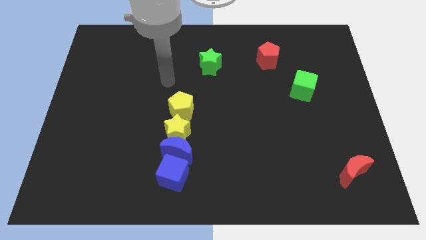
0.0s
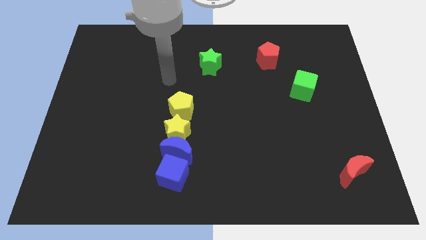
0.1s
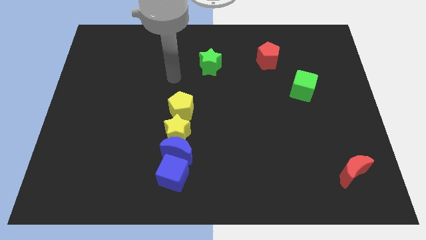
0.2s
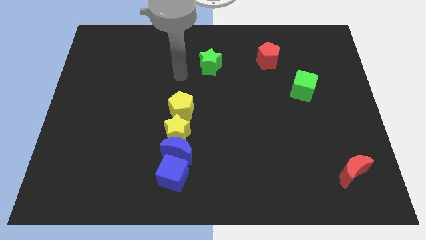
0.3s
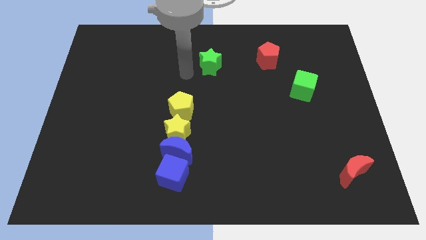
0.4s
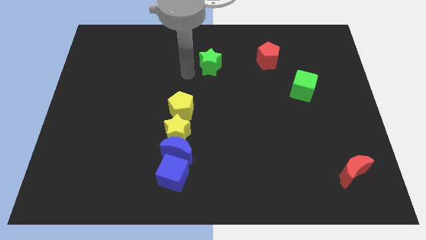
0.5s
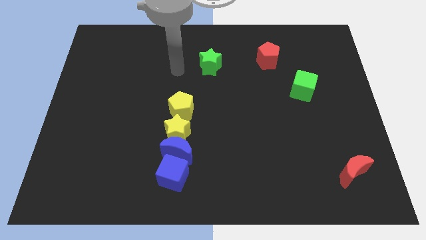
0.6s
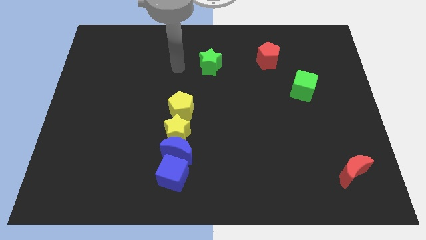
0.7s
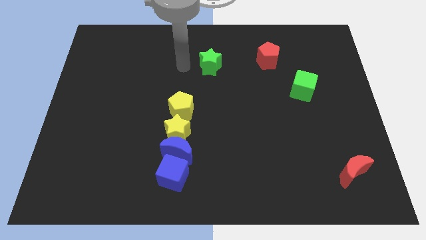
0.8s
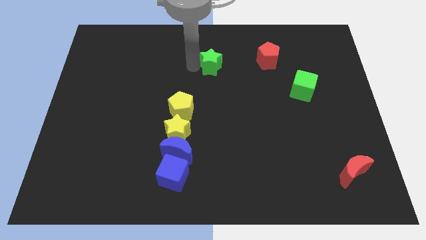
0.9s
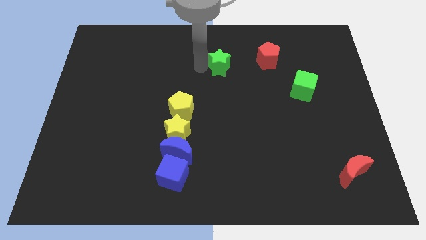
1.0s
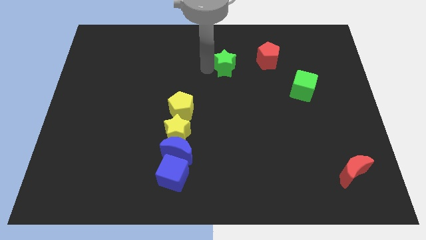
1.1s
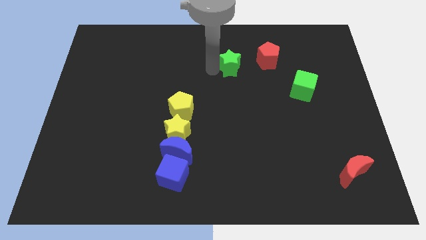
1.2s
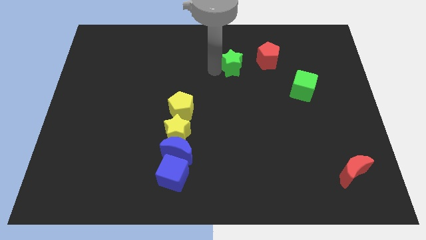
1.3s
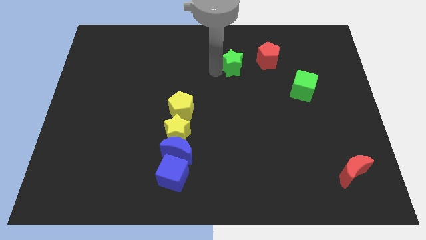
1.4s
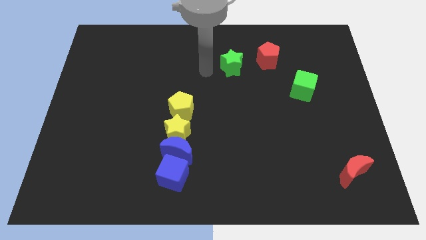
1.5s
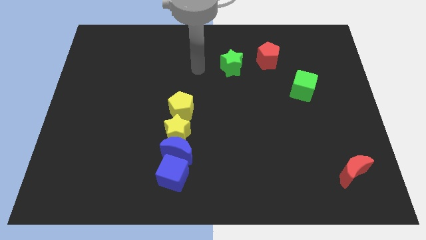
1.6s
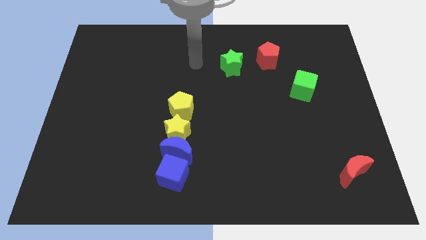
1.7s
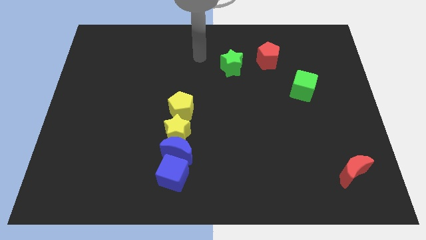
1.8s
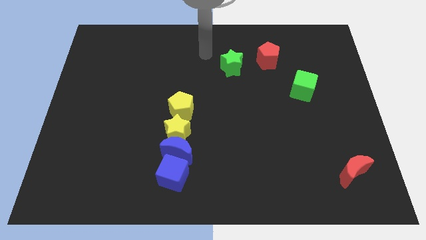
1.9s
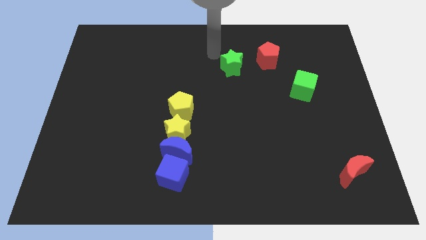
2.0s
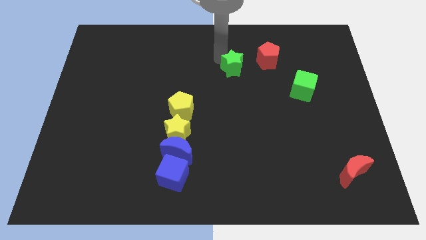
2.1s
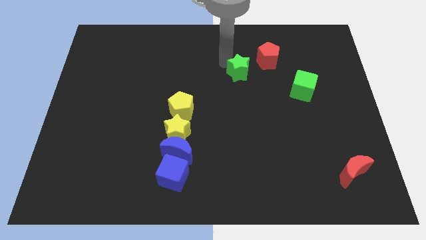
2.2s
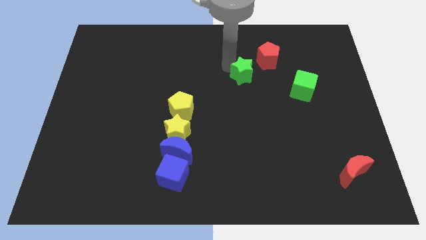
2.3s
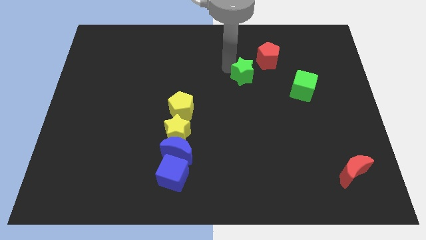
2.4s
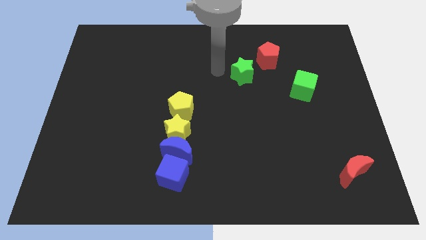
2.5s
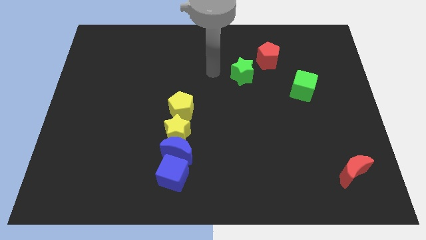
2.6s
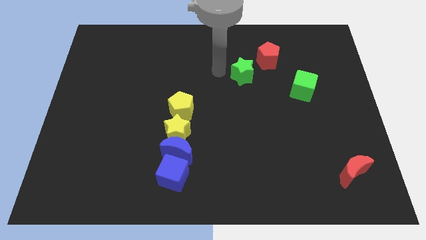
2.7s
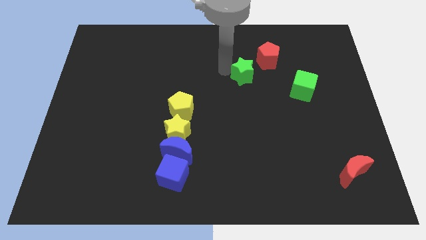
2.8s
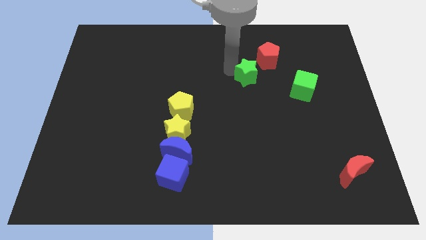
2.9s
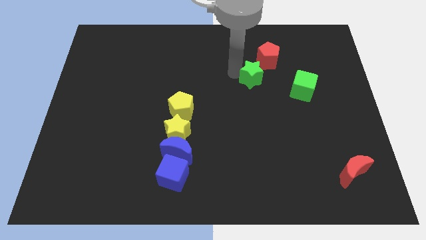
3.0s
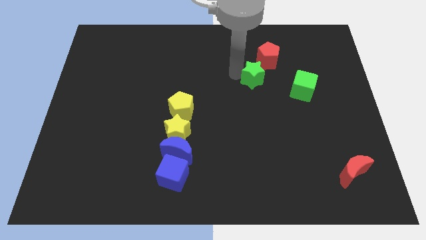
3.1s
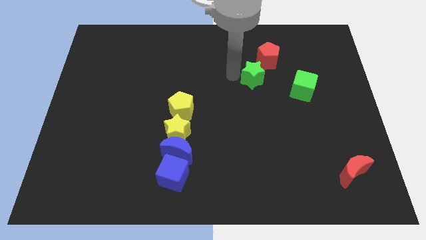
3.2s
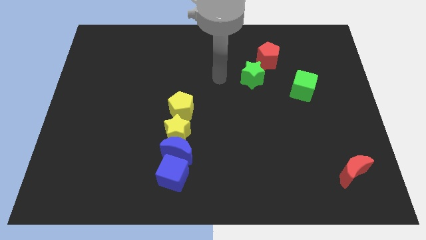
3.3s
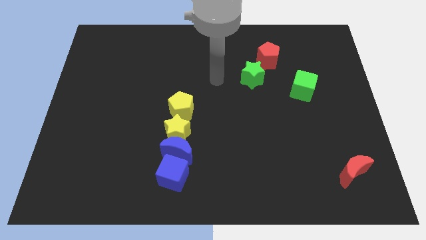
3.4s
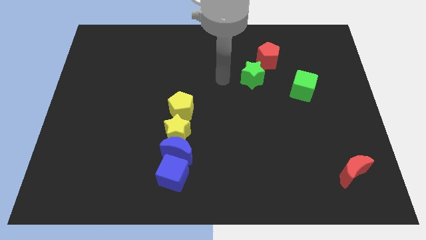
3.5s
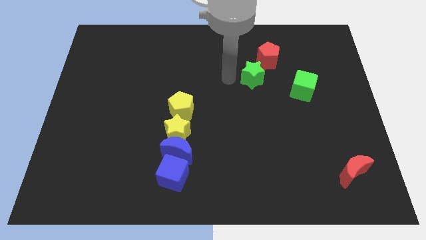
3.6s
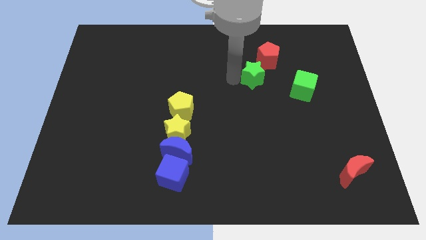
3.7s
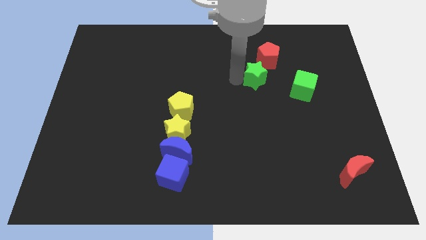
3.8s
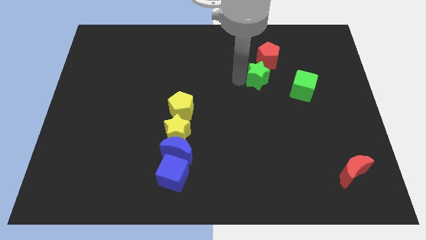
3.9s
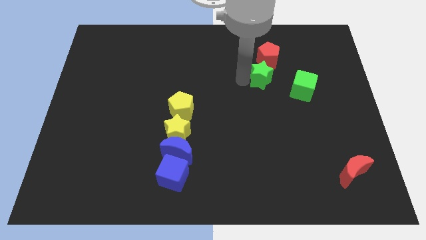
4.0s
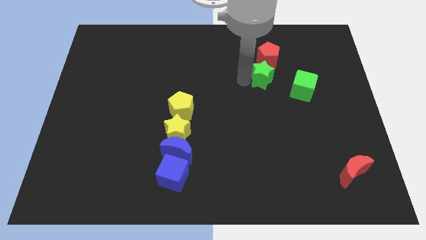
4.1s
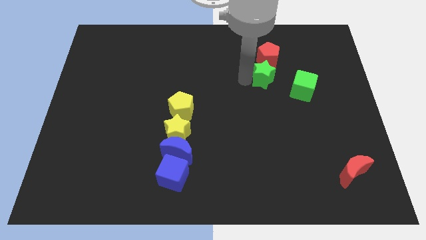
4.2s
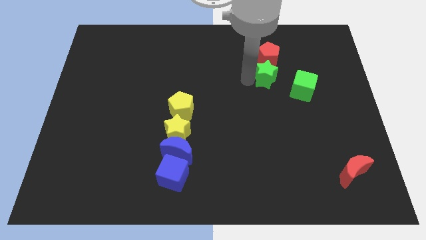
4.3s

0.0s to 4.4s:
push the green star to the bottom of the red pentagon

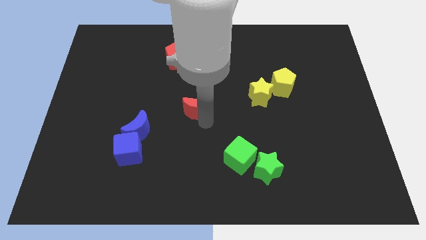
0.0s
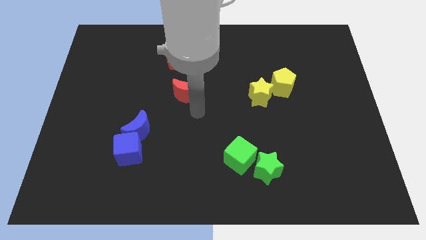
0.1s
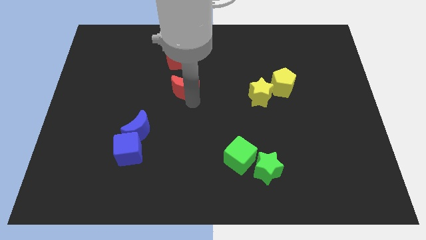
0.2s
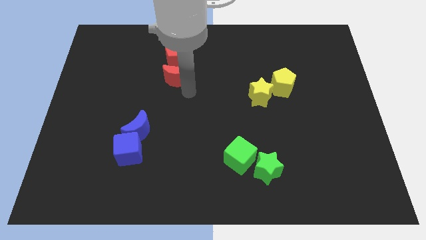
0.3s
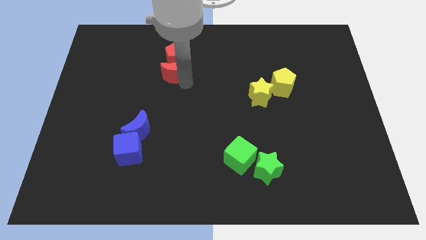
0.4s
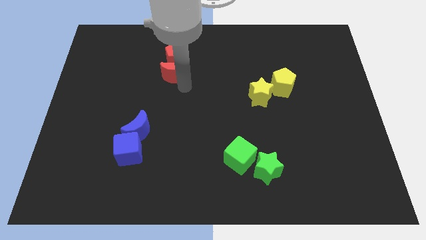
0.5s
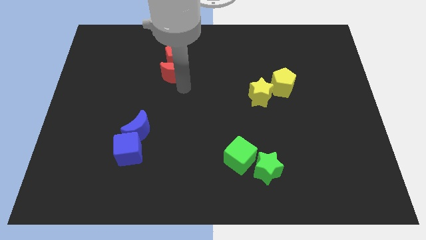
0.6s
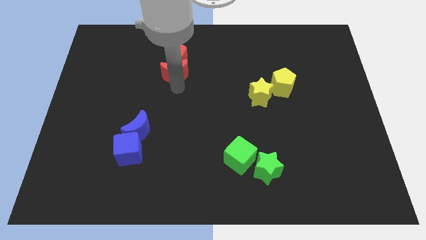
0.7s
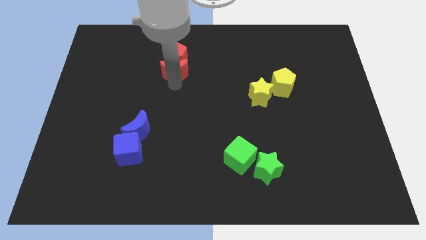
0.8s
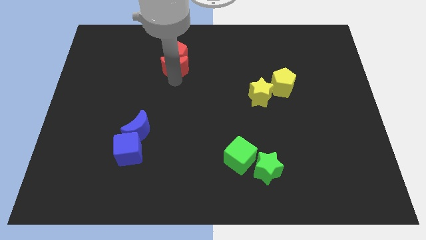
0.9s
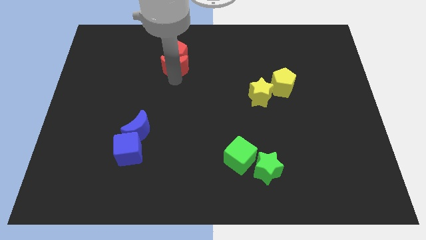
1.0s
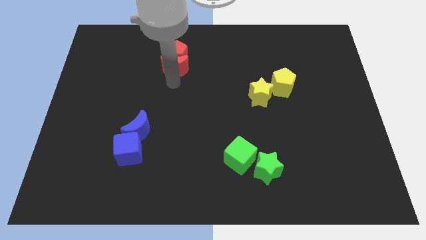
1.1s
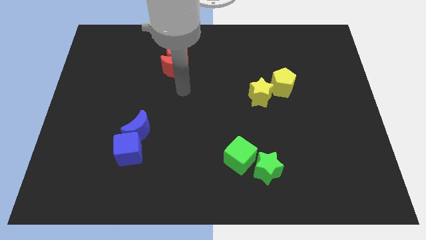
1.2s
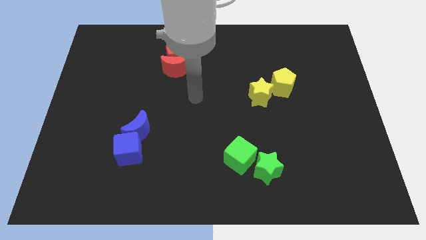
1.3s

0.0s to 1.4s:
place the red moon below to the red pentagon

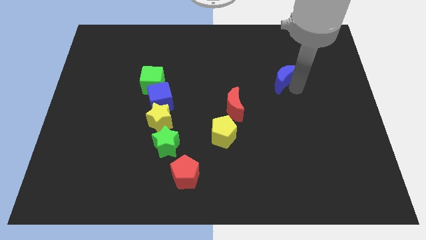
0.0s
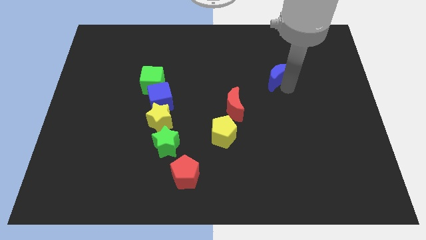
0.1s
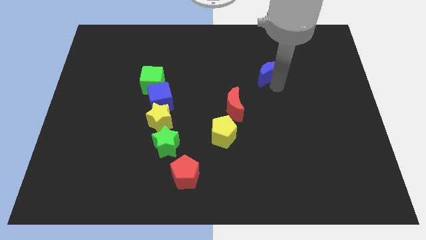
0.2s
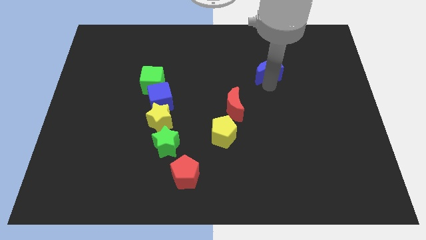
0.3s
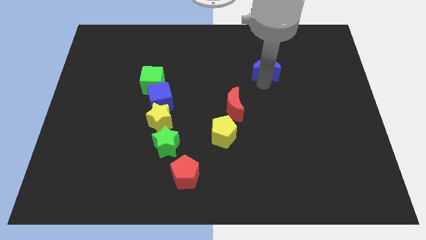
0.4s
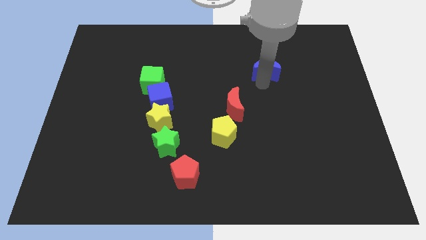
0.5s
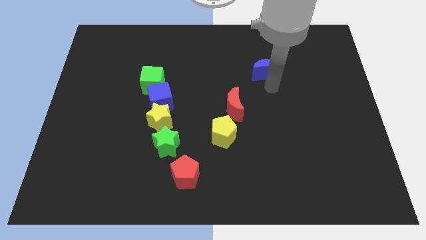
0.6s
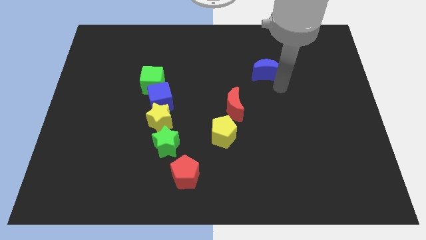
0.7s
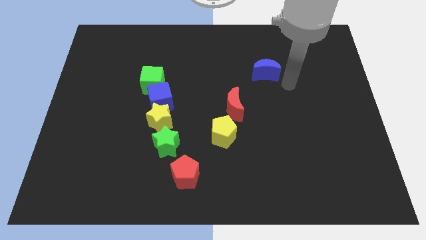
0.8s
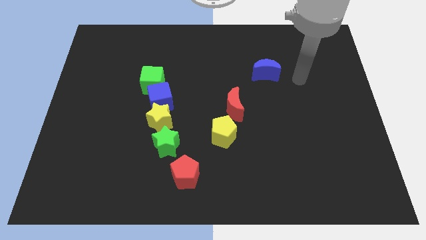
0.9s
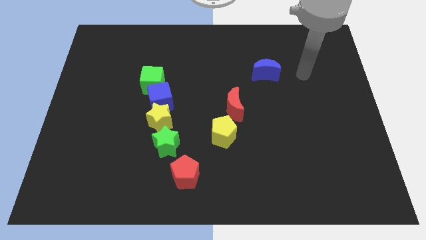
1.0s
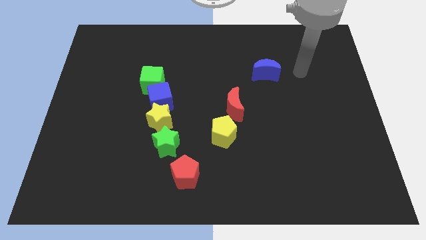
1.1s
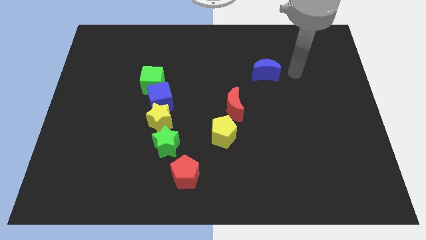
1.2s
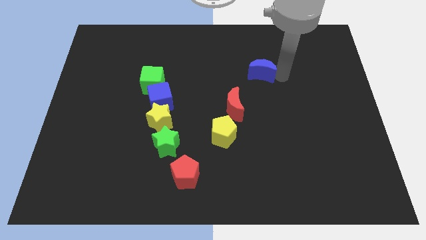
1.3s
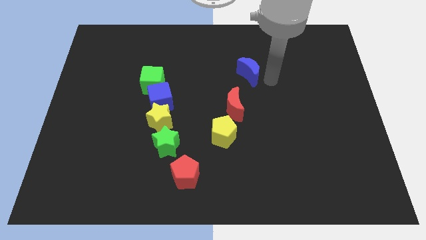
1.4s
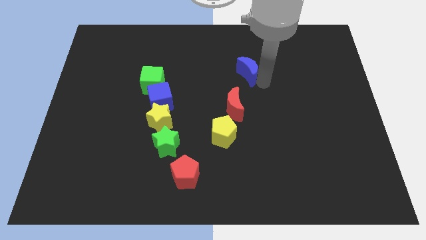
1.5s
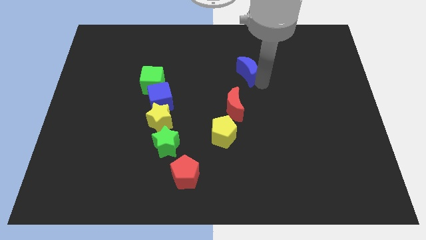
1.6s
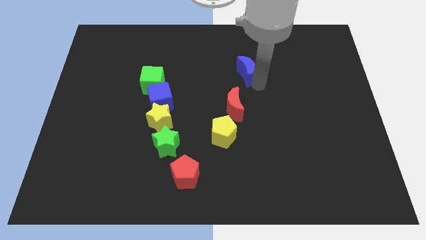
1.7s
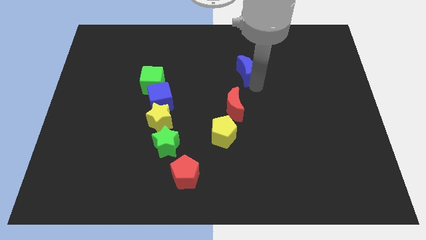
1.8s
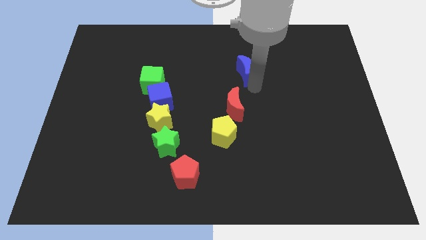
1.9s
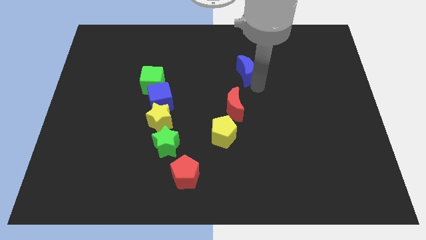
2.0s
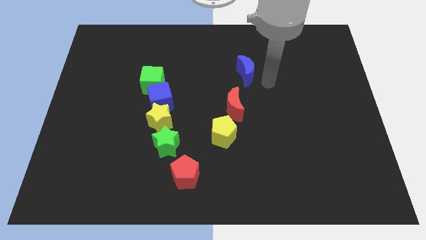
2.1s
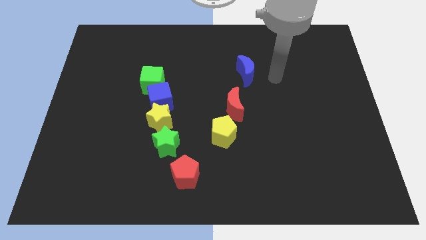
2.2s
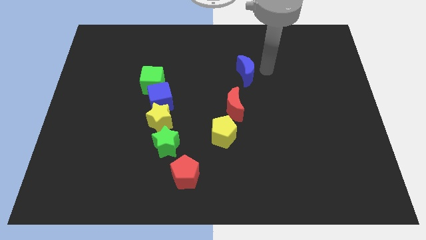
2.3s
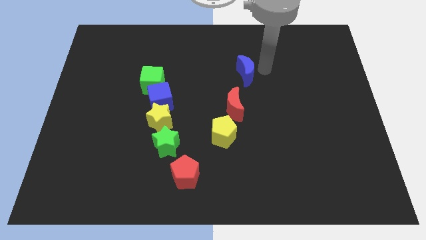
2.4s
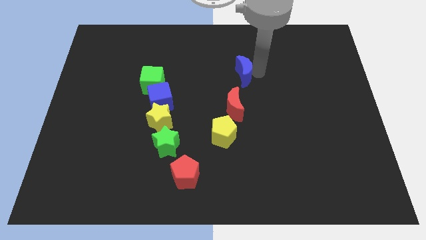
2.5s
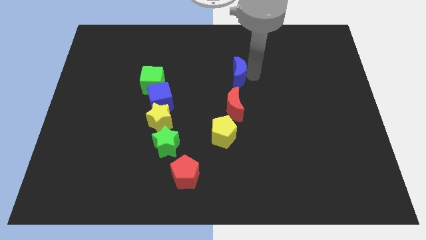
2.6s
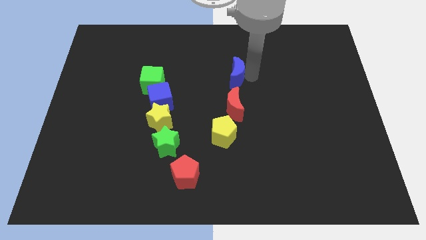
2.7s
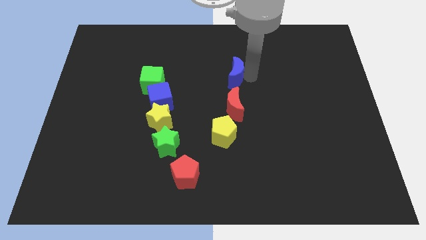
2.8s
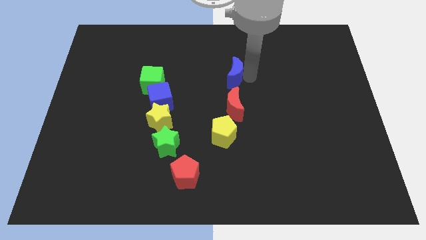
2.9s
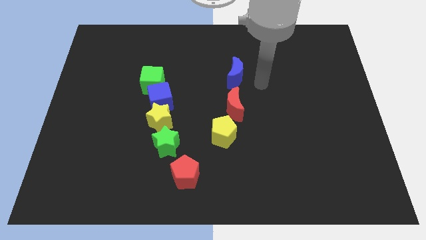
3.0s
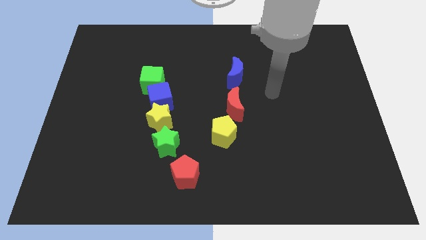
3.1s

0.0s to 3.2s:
place blue moon on top of red moon
